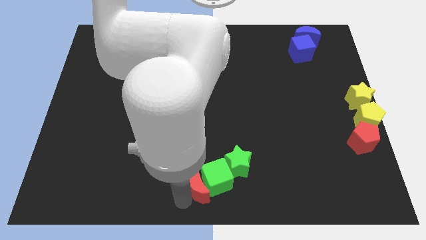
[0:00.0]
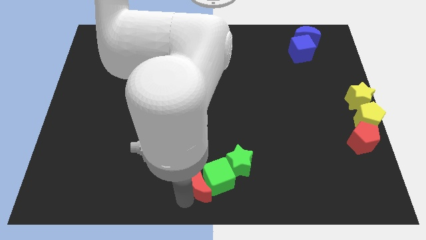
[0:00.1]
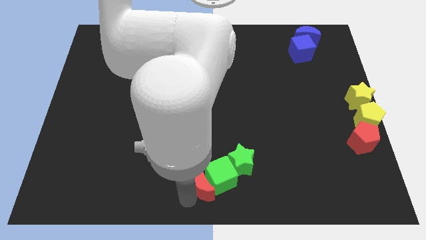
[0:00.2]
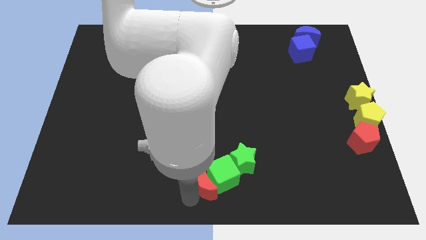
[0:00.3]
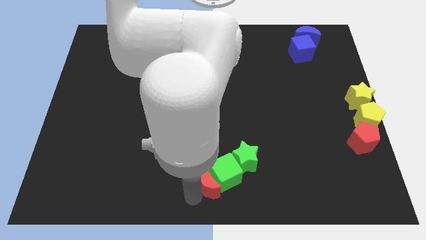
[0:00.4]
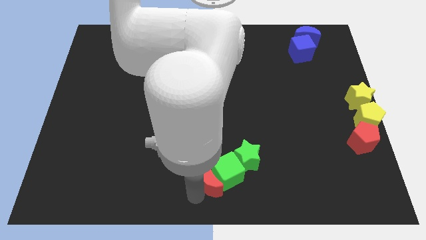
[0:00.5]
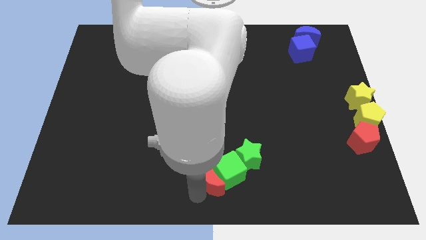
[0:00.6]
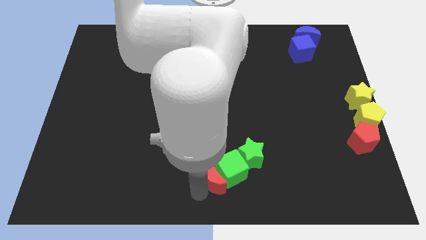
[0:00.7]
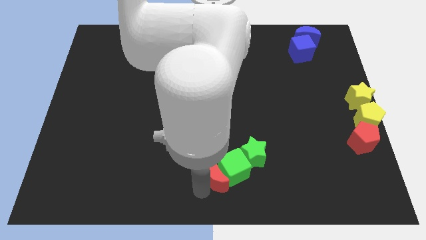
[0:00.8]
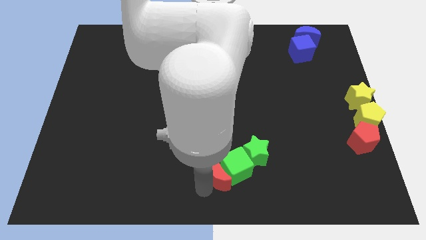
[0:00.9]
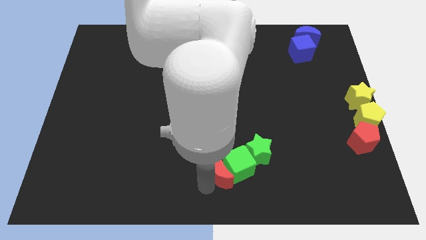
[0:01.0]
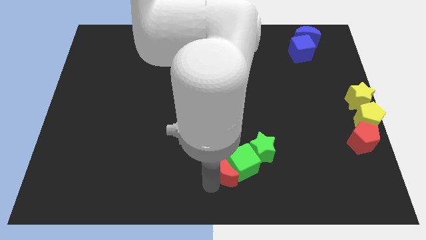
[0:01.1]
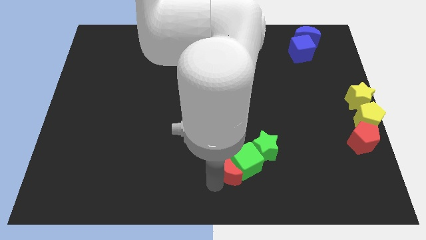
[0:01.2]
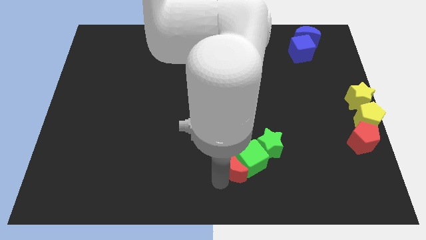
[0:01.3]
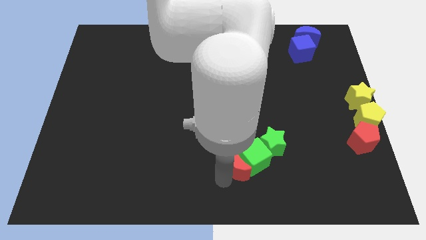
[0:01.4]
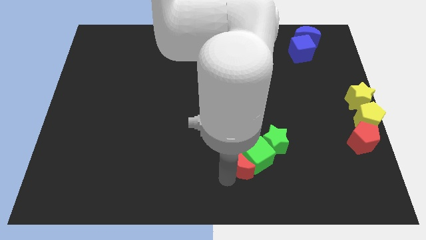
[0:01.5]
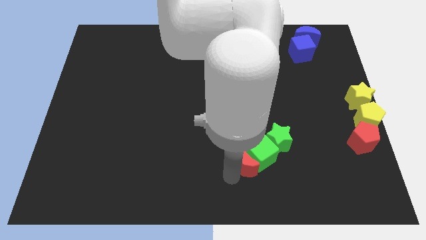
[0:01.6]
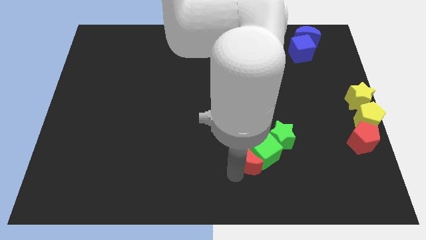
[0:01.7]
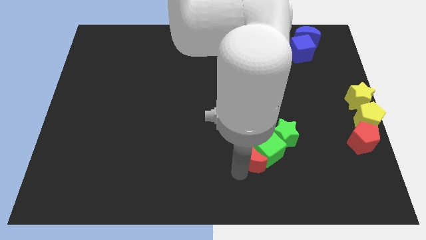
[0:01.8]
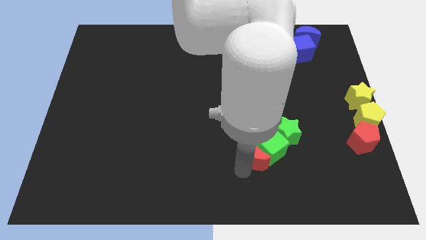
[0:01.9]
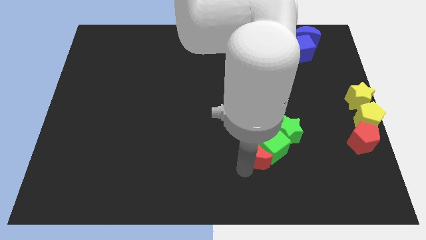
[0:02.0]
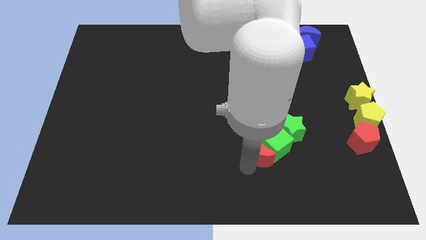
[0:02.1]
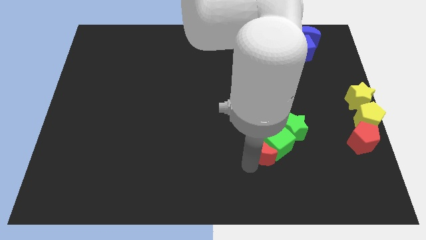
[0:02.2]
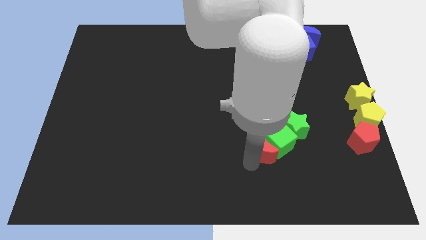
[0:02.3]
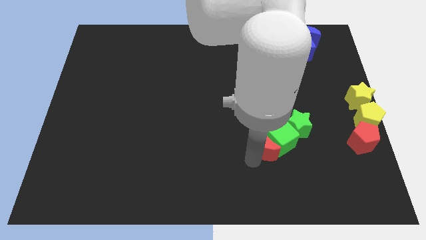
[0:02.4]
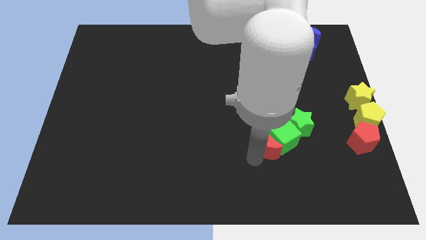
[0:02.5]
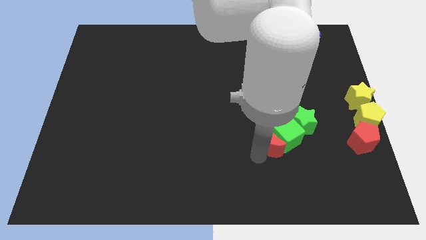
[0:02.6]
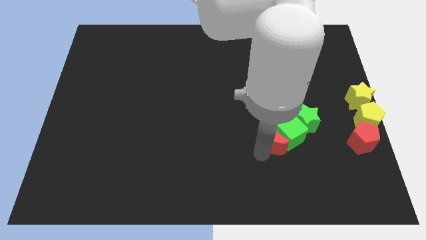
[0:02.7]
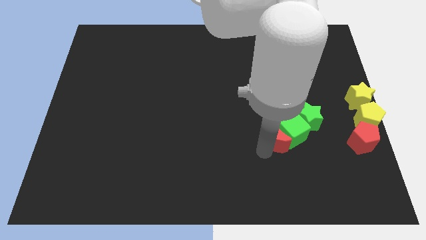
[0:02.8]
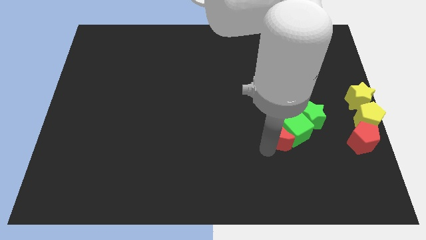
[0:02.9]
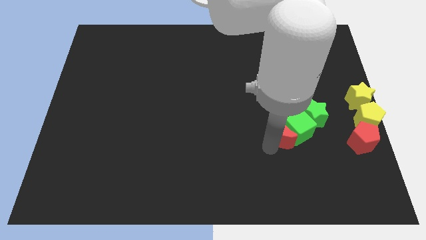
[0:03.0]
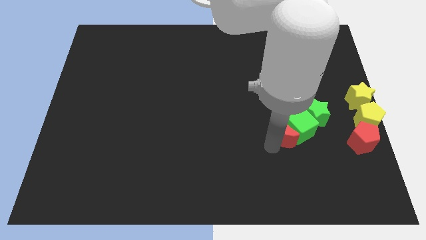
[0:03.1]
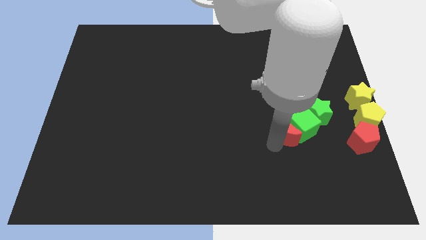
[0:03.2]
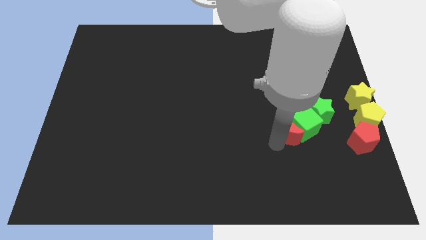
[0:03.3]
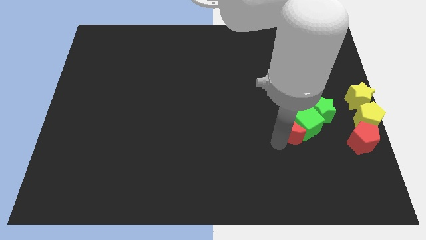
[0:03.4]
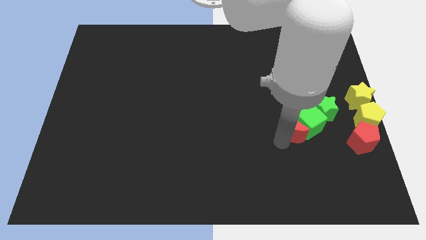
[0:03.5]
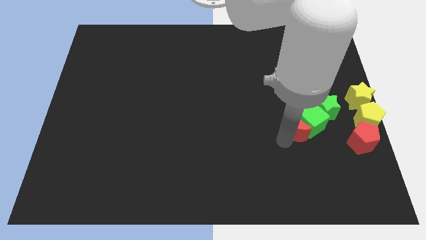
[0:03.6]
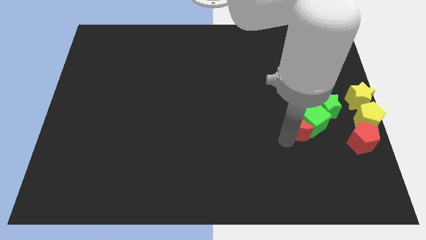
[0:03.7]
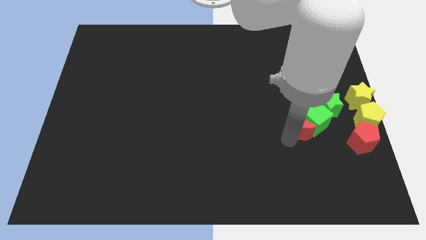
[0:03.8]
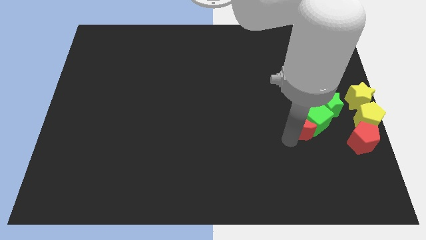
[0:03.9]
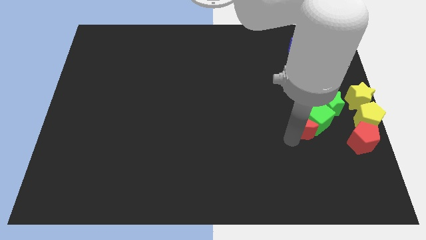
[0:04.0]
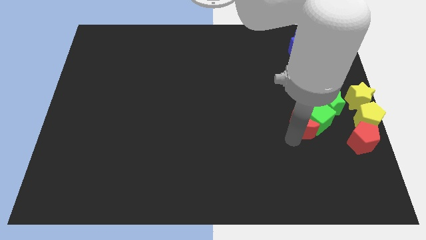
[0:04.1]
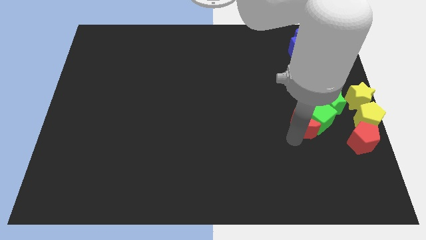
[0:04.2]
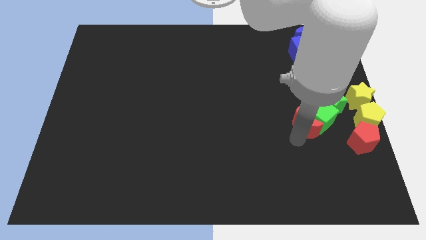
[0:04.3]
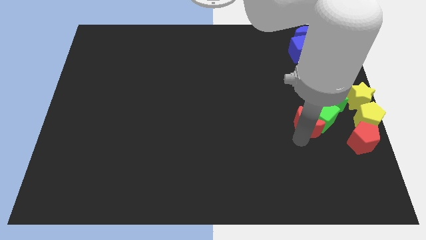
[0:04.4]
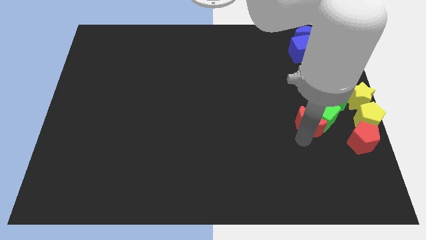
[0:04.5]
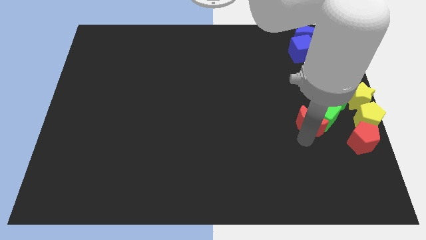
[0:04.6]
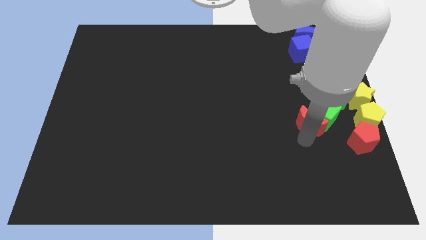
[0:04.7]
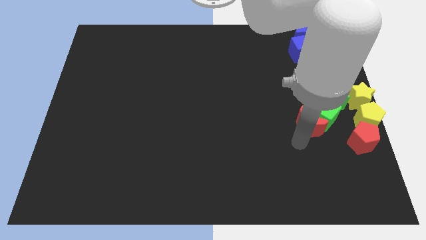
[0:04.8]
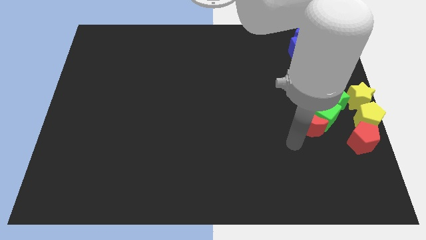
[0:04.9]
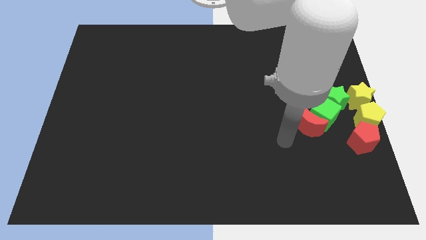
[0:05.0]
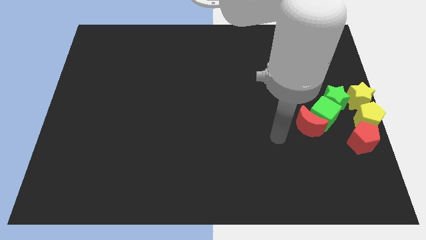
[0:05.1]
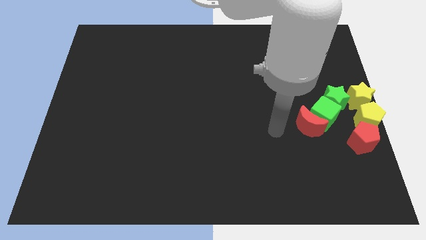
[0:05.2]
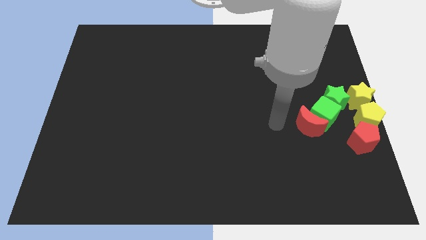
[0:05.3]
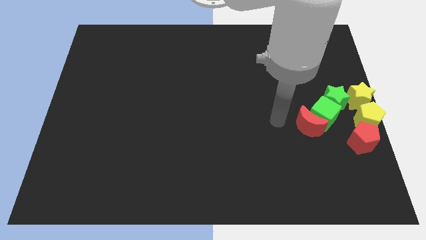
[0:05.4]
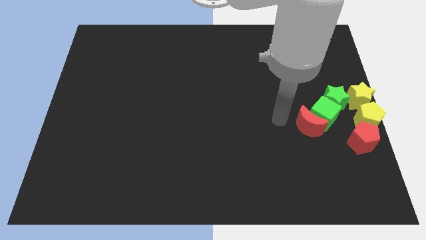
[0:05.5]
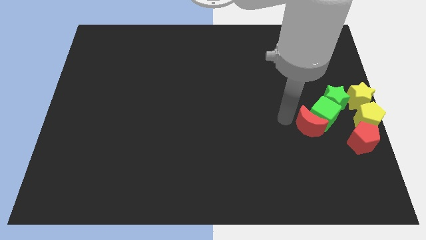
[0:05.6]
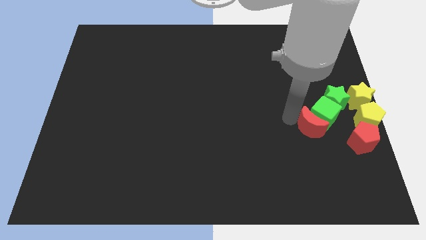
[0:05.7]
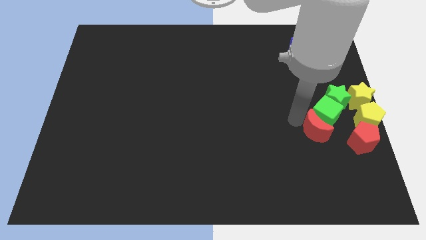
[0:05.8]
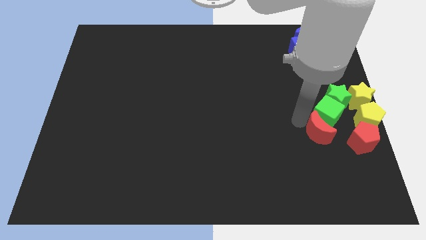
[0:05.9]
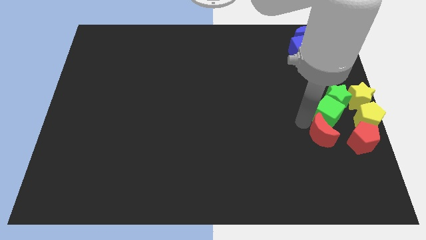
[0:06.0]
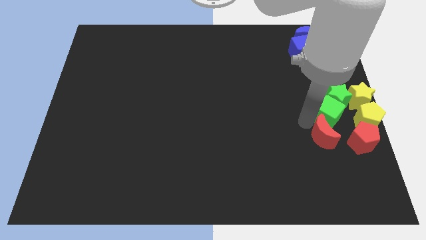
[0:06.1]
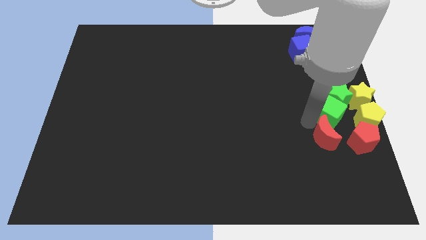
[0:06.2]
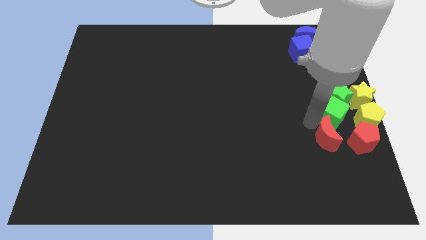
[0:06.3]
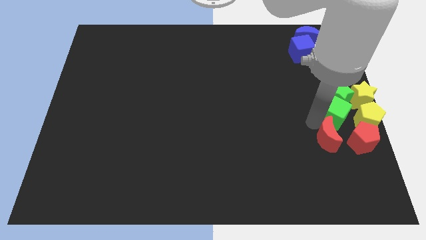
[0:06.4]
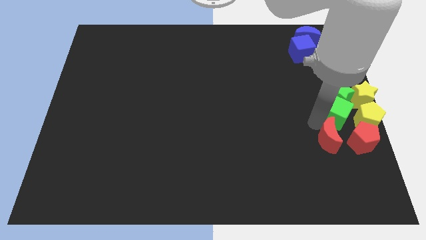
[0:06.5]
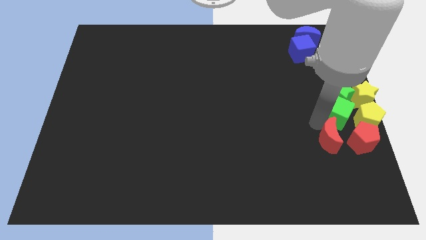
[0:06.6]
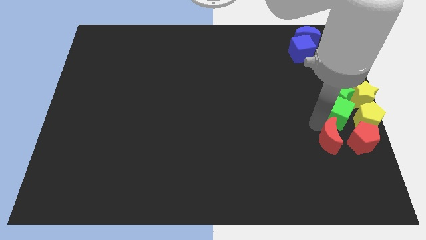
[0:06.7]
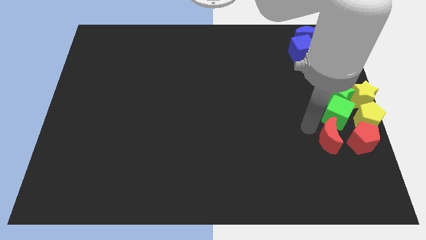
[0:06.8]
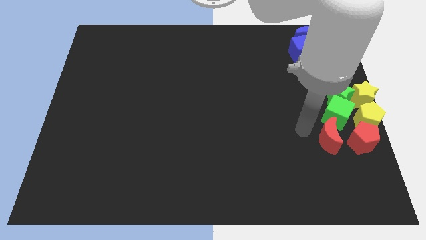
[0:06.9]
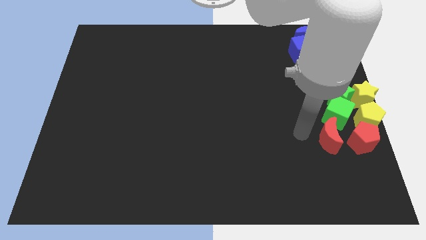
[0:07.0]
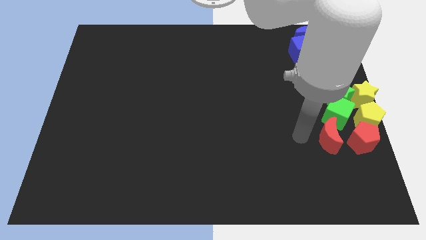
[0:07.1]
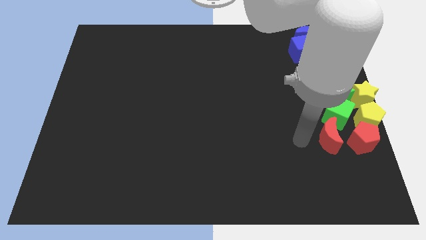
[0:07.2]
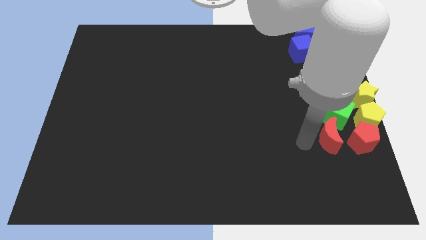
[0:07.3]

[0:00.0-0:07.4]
move a group of block towards the right center

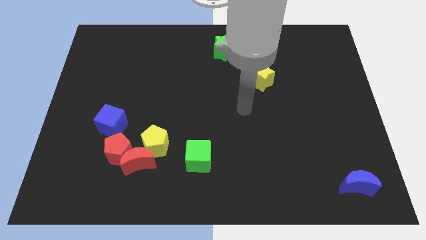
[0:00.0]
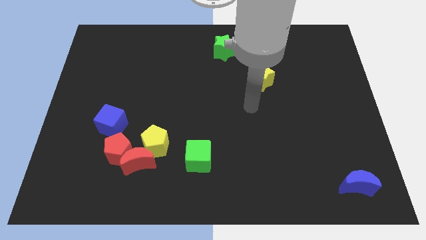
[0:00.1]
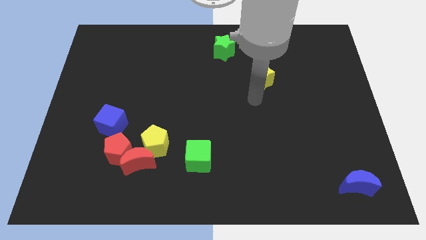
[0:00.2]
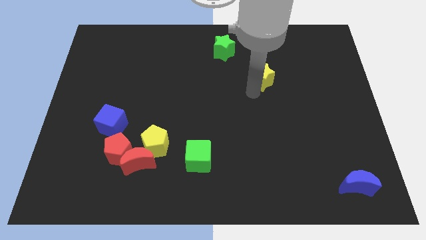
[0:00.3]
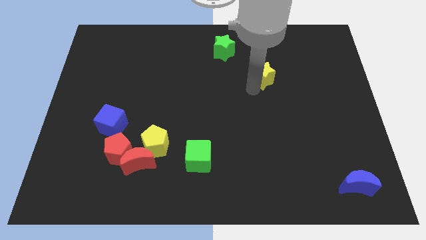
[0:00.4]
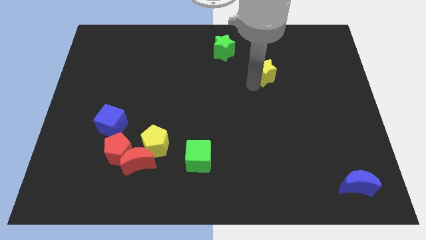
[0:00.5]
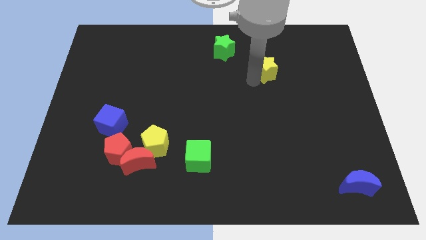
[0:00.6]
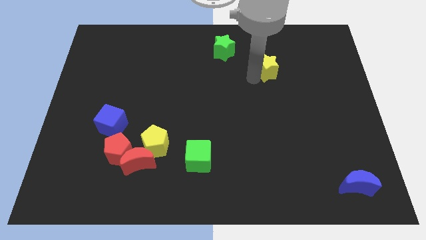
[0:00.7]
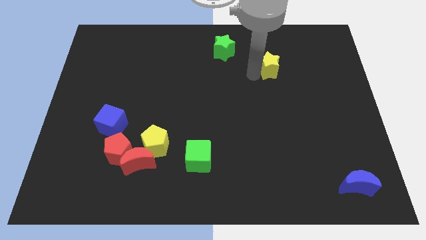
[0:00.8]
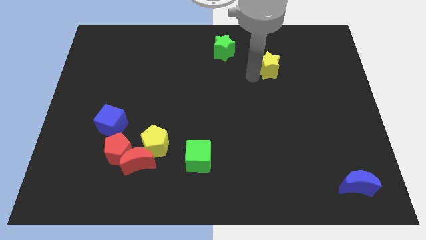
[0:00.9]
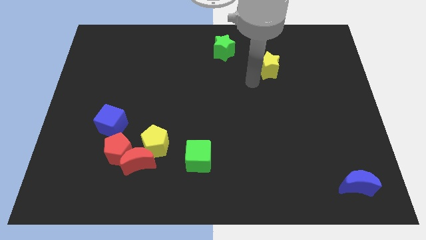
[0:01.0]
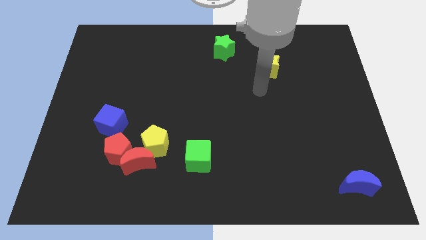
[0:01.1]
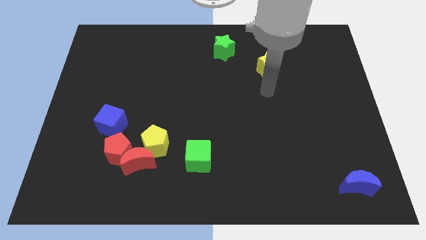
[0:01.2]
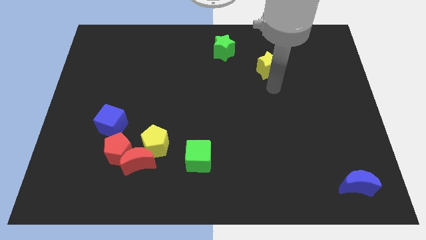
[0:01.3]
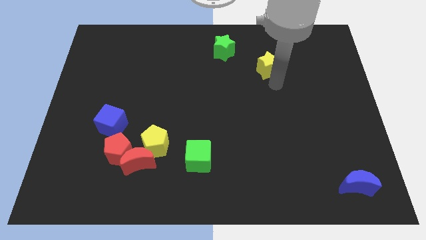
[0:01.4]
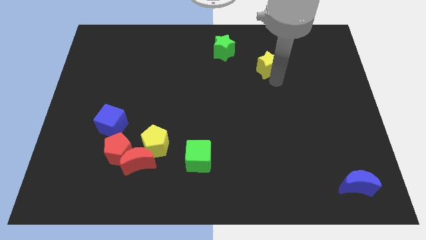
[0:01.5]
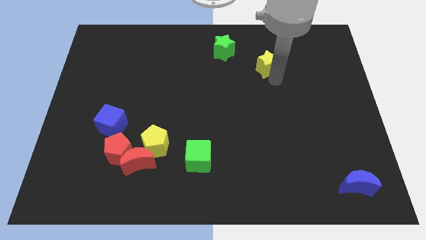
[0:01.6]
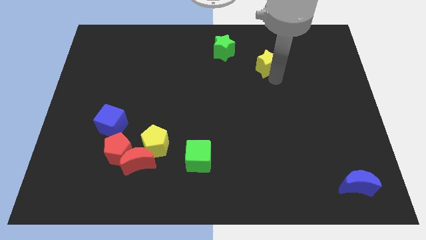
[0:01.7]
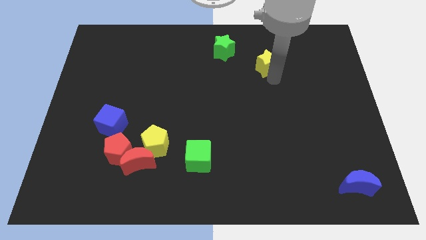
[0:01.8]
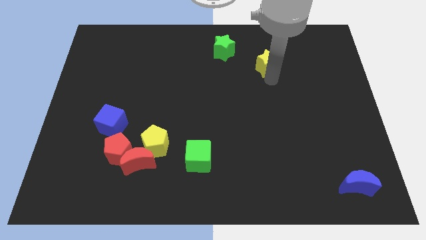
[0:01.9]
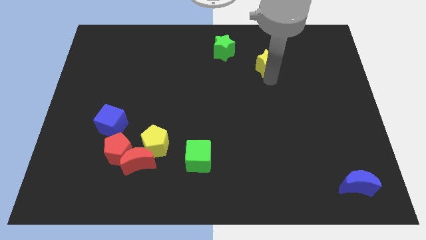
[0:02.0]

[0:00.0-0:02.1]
move the yellow star slightly towards up
